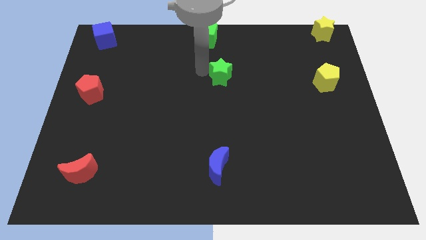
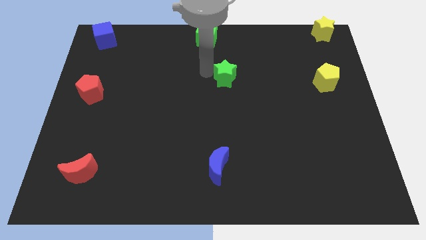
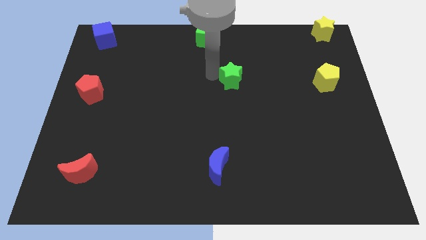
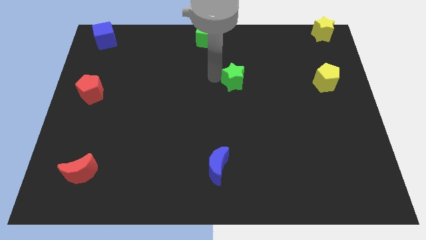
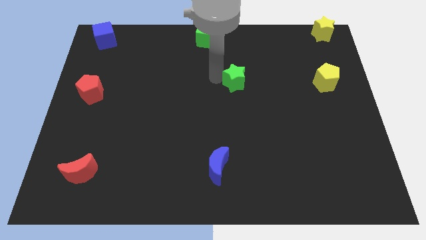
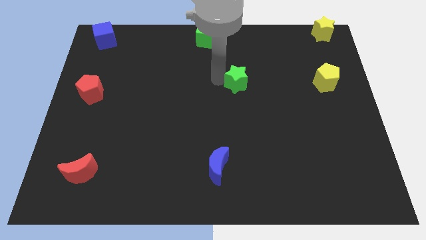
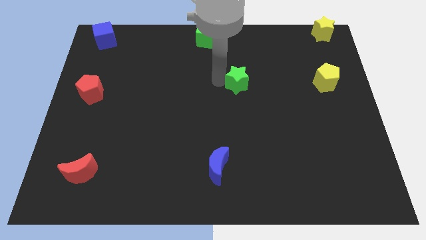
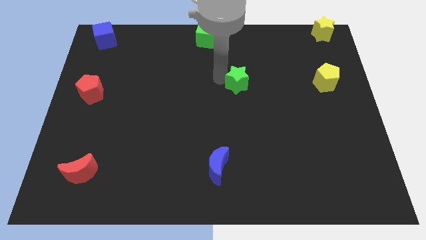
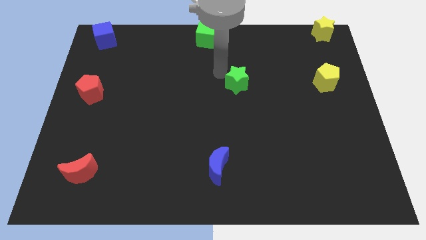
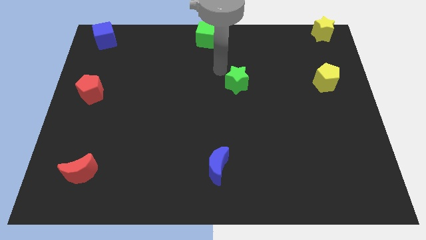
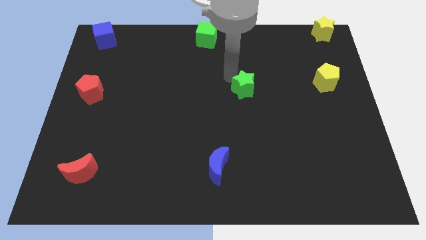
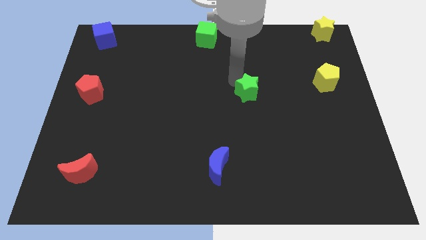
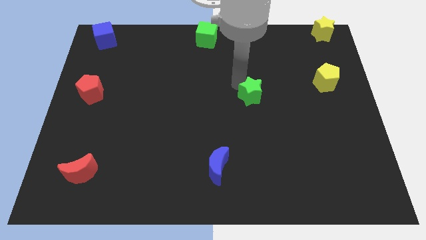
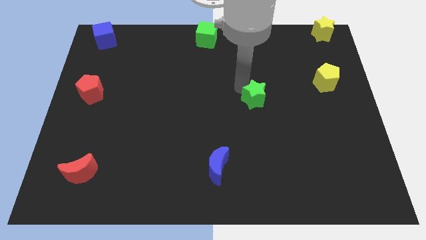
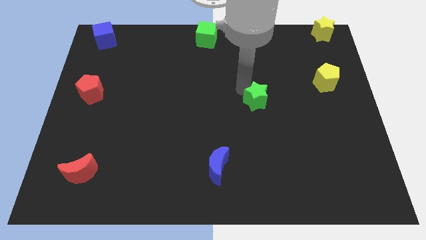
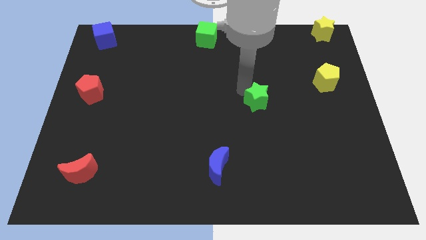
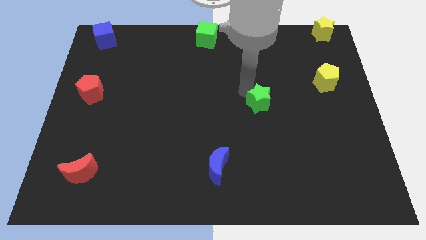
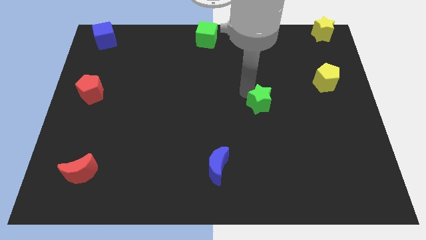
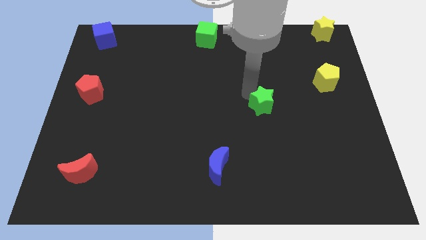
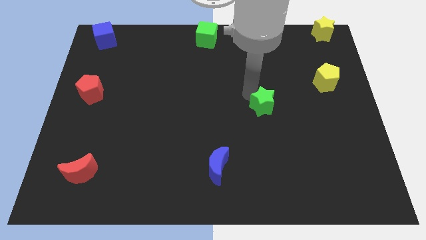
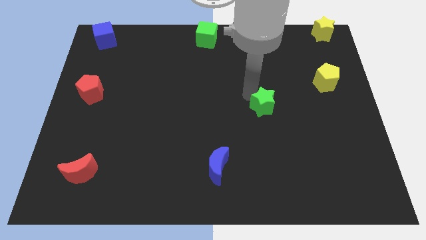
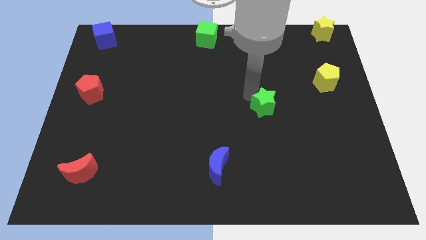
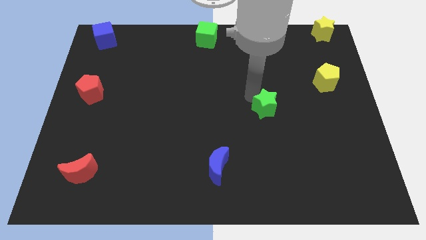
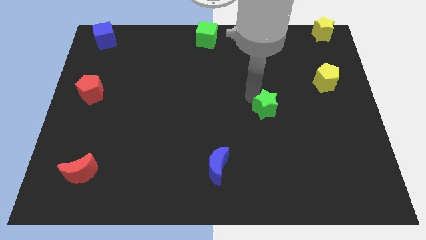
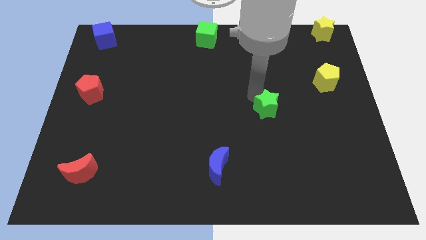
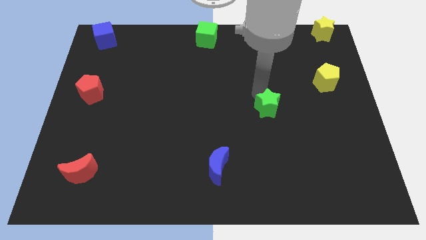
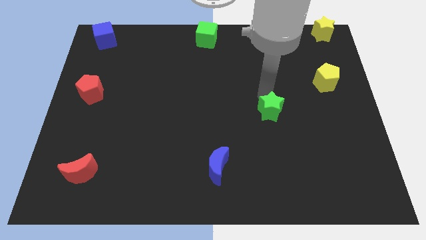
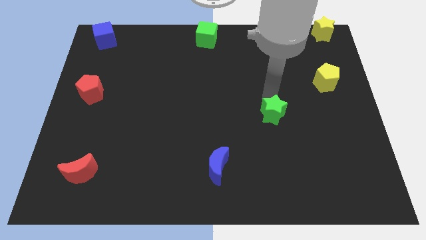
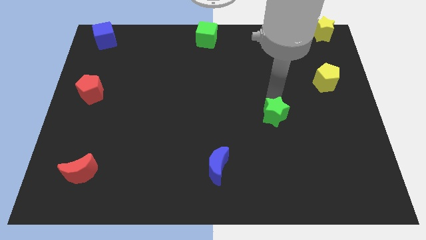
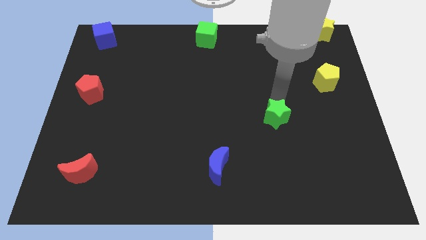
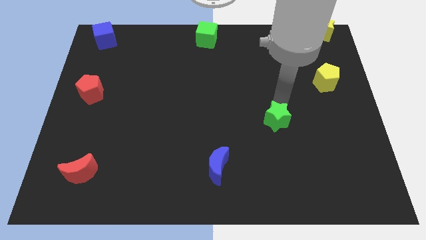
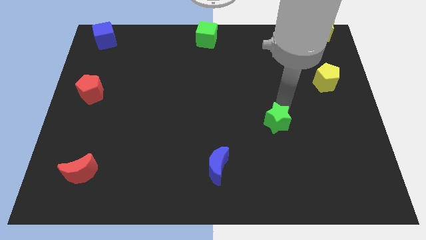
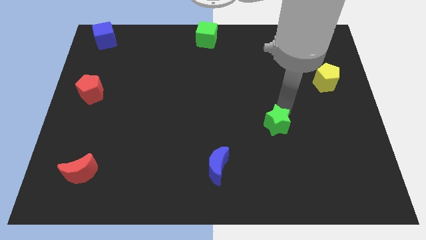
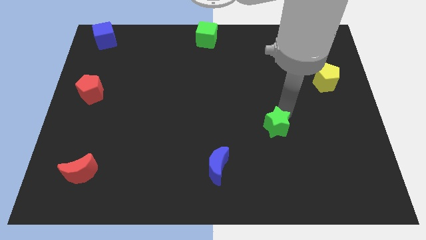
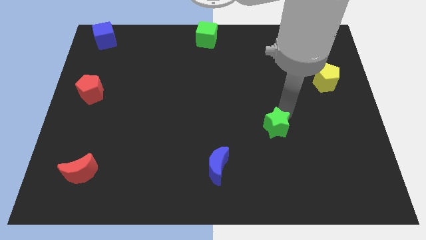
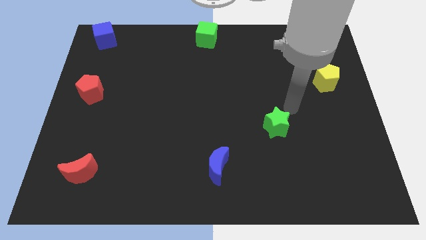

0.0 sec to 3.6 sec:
move the green star diagonally top right to the blue crescent

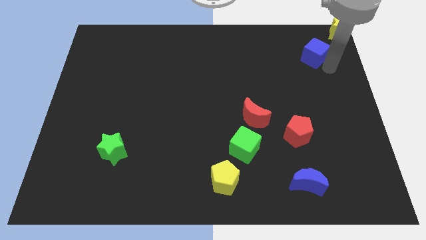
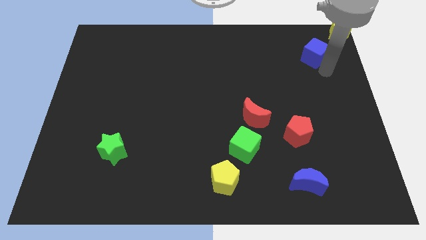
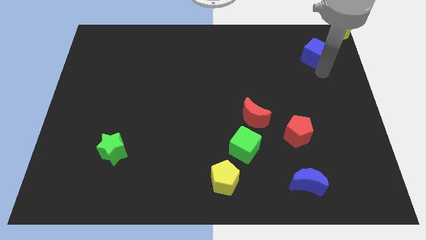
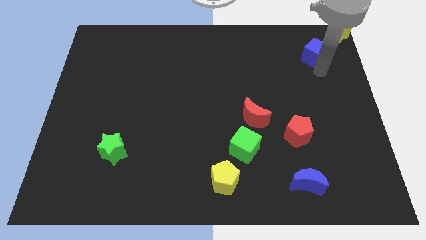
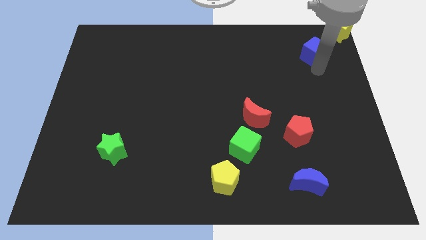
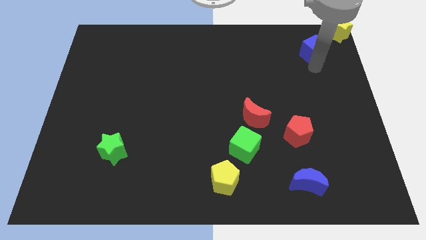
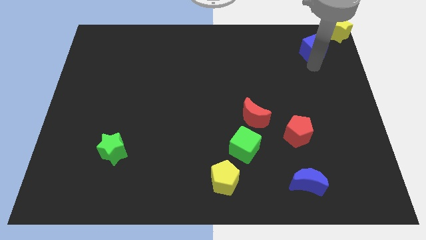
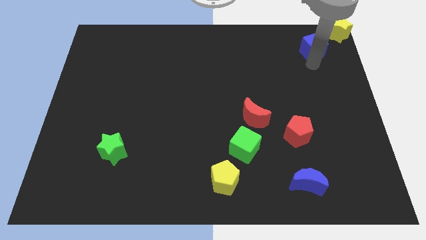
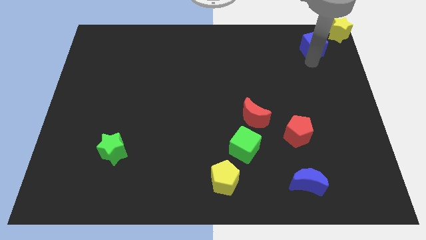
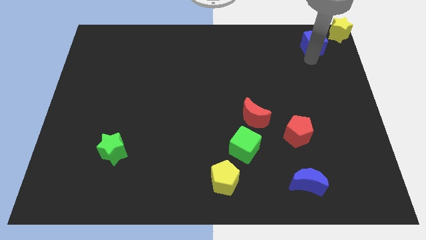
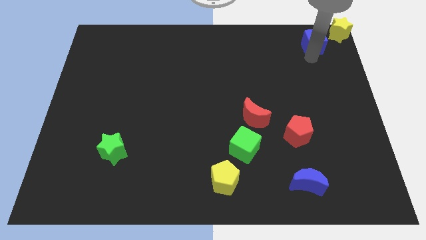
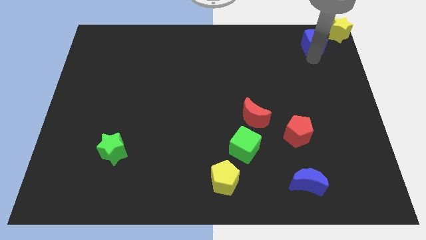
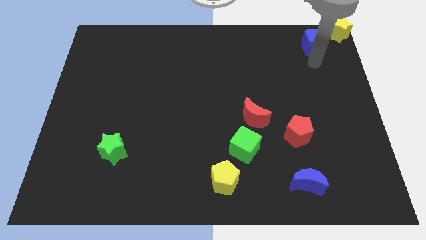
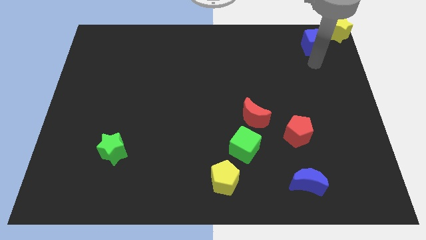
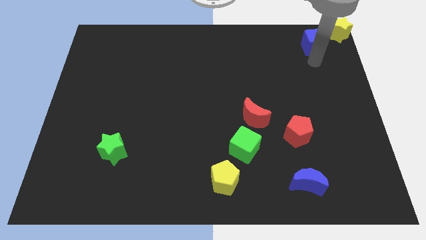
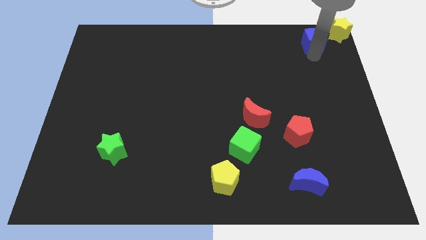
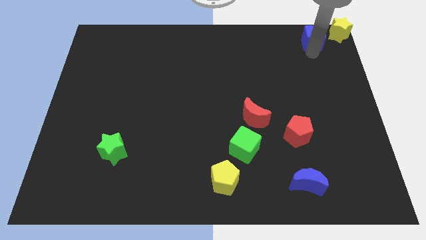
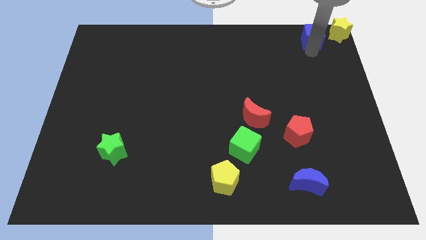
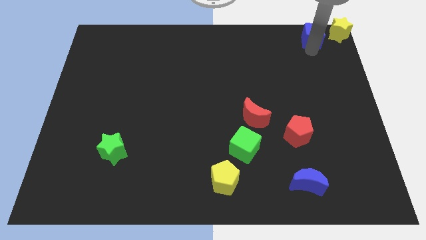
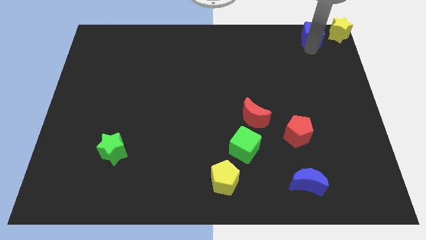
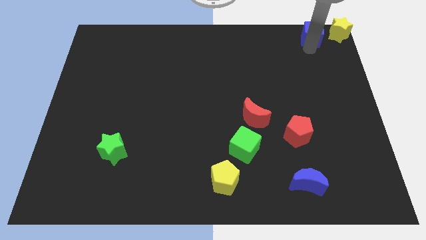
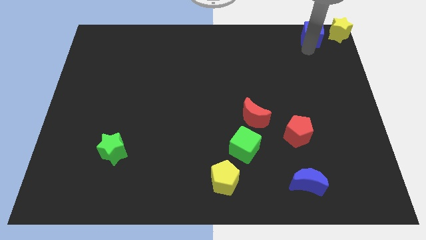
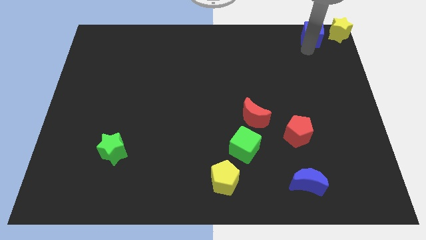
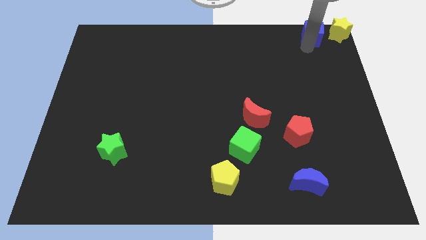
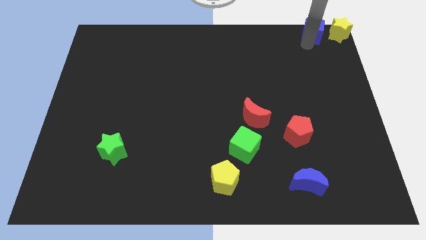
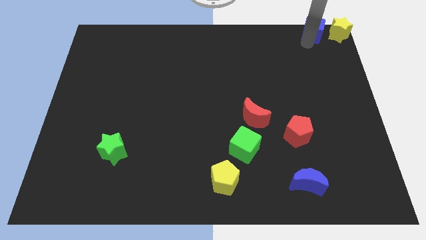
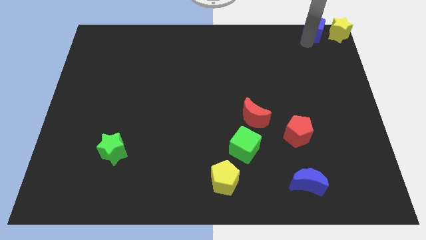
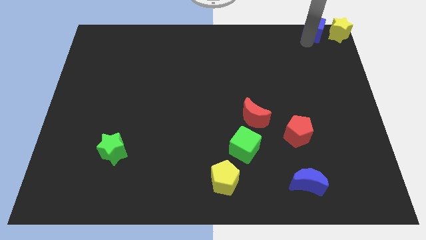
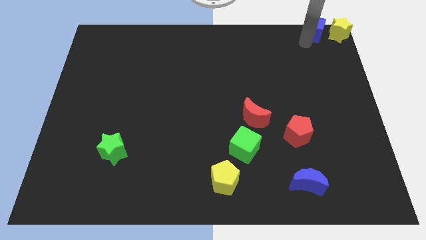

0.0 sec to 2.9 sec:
move the blue cube on the left side of the yellow star

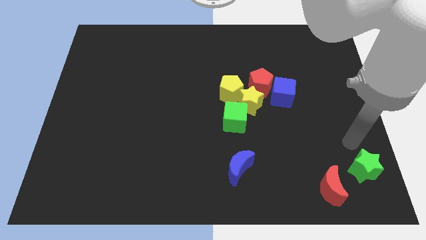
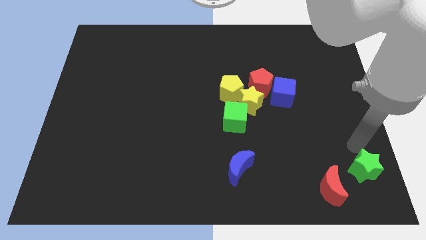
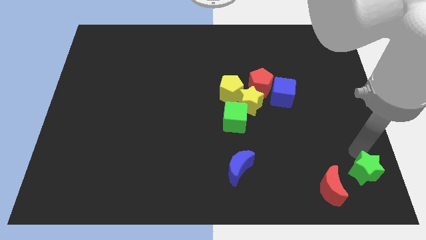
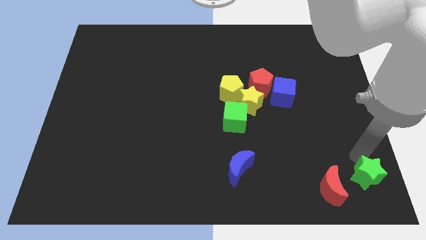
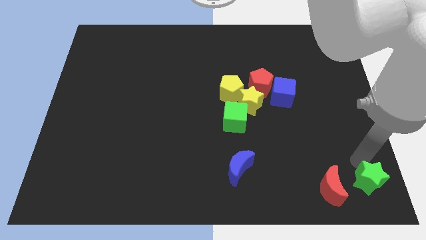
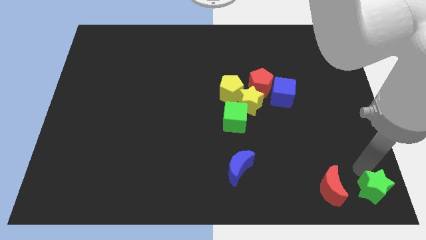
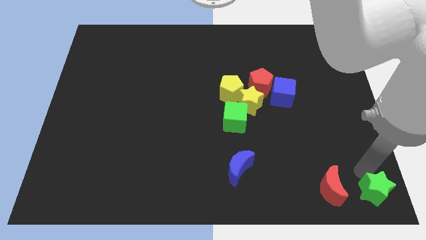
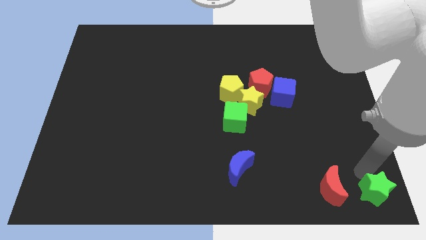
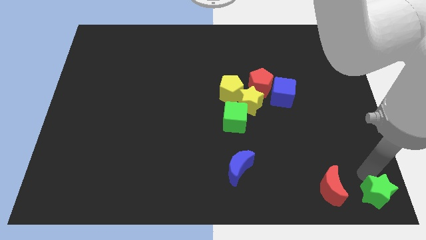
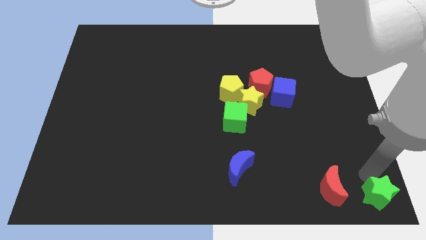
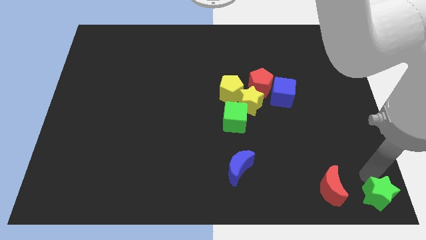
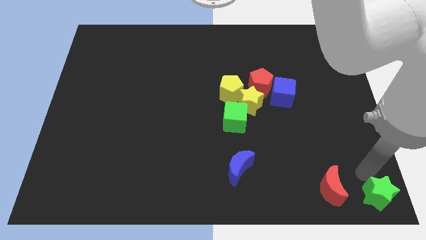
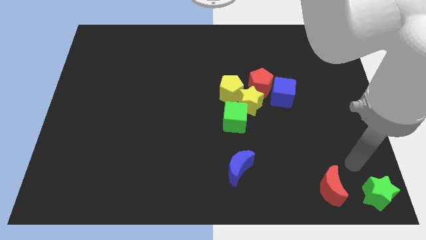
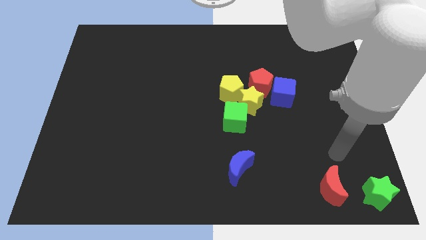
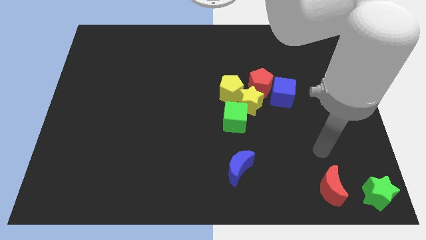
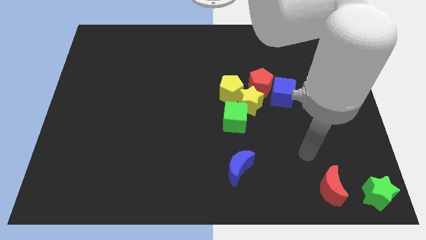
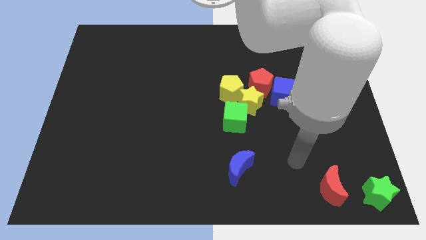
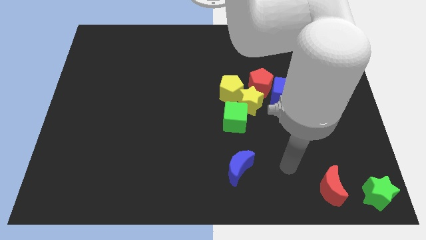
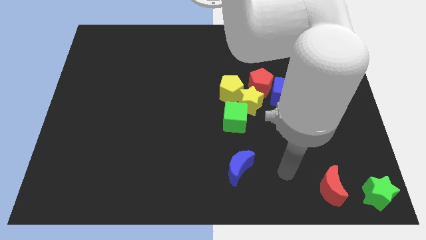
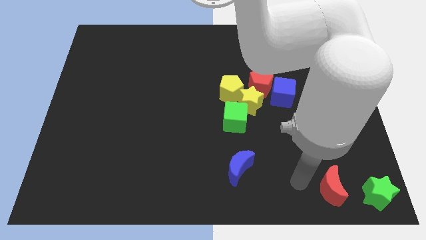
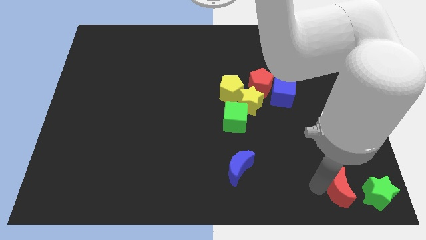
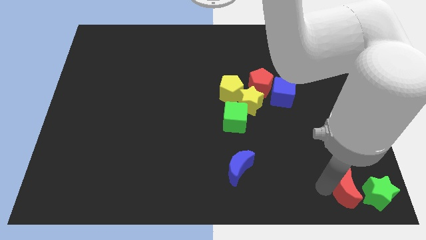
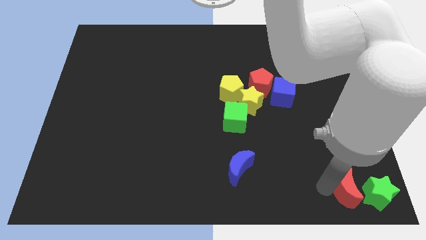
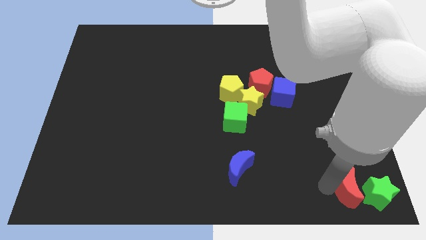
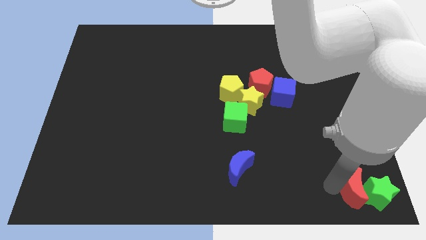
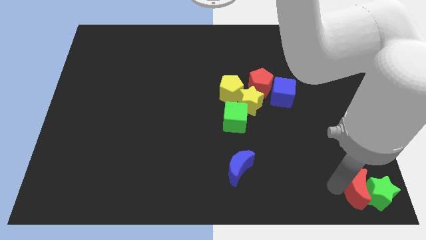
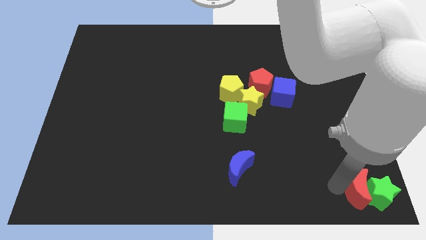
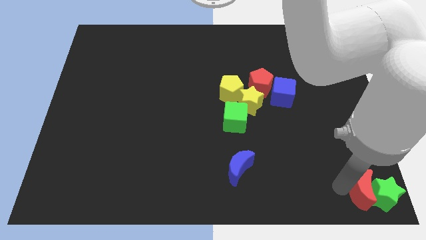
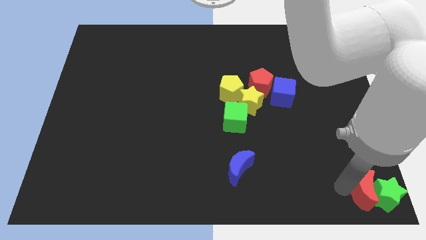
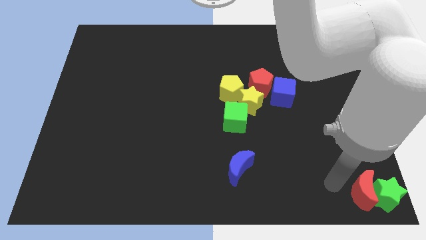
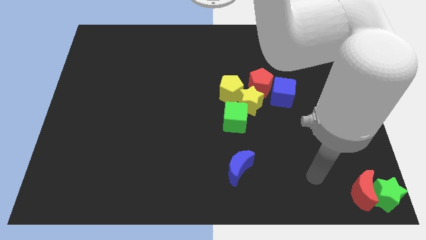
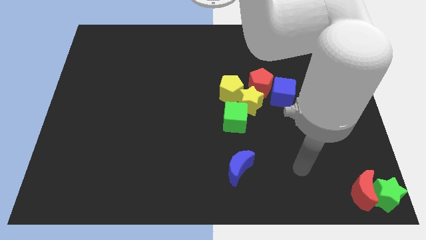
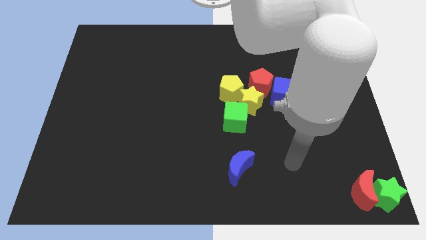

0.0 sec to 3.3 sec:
place the red crescent and green star together at the bottom right corner of the board
